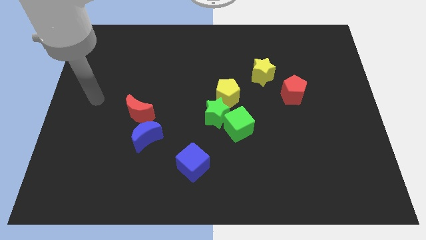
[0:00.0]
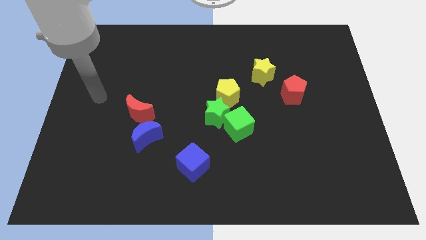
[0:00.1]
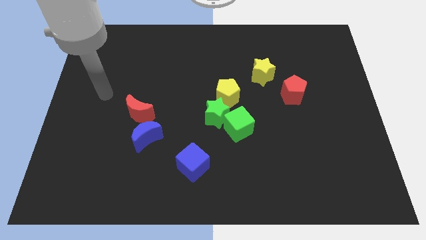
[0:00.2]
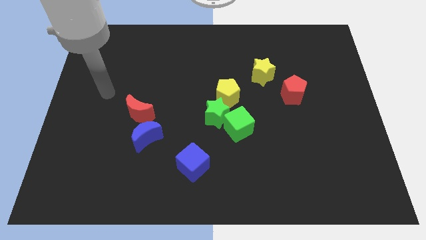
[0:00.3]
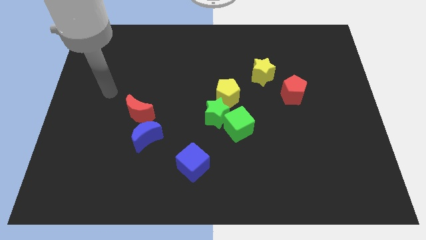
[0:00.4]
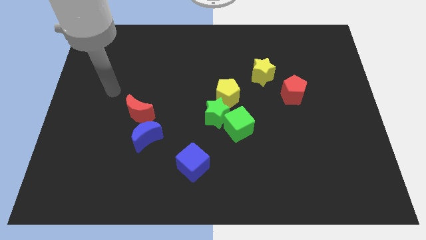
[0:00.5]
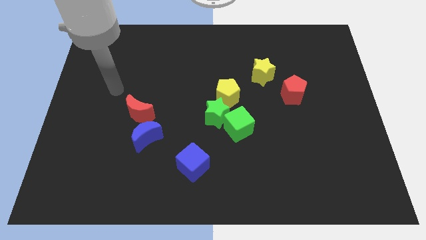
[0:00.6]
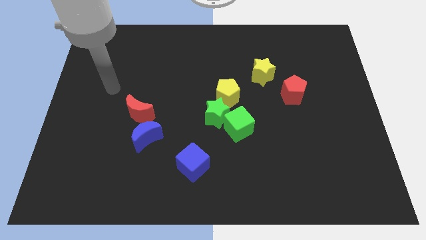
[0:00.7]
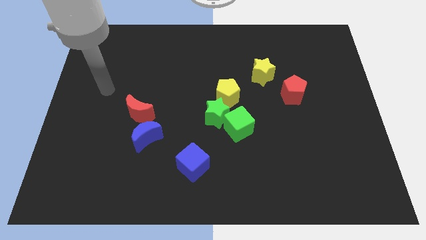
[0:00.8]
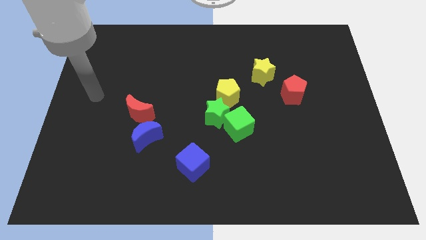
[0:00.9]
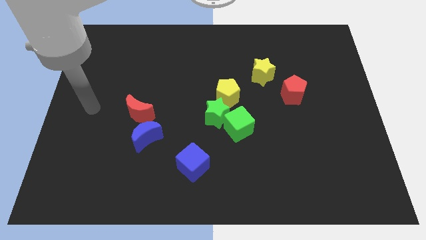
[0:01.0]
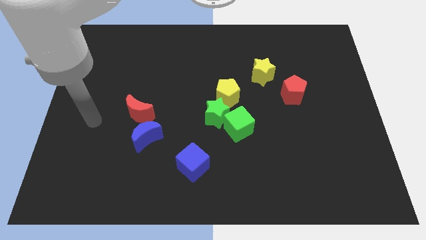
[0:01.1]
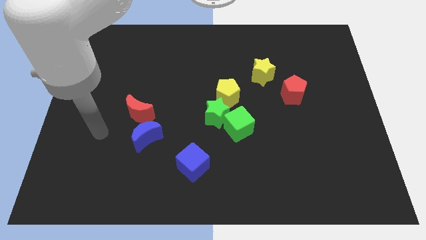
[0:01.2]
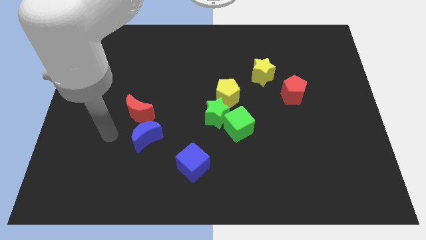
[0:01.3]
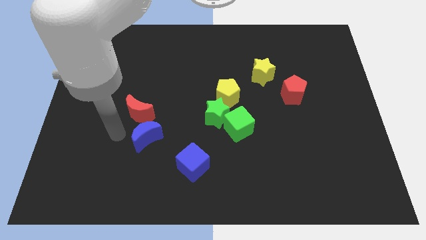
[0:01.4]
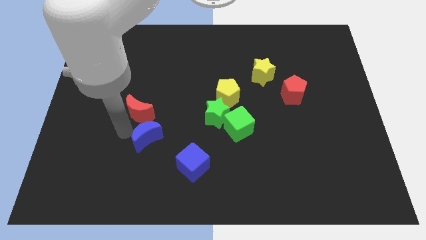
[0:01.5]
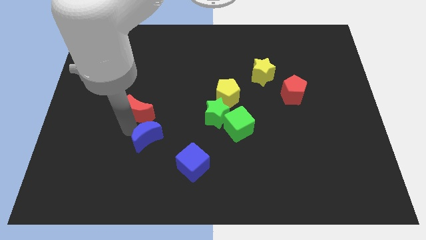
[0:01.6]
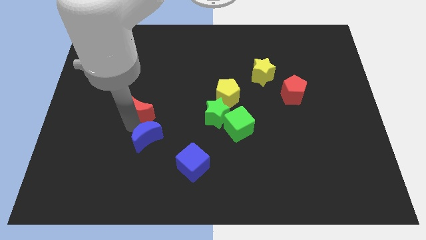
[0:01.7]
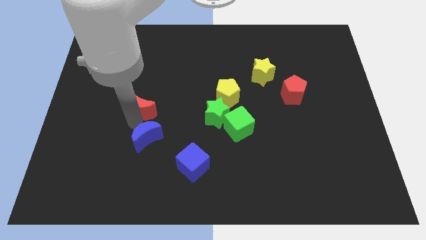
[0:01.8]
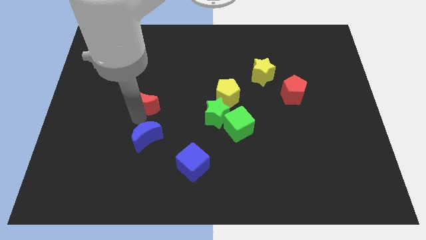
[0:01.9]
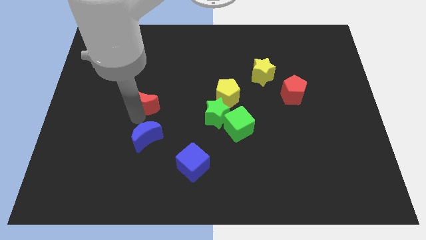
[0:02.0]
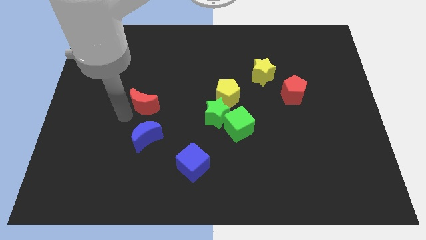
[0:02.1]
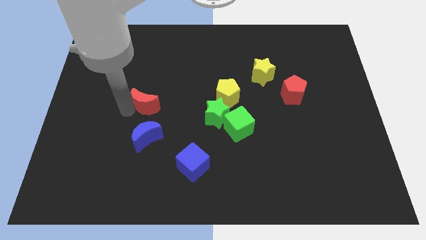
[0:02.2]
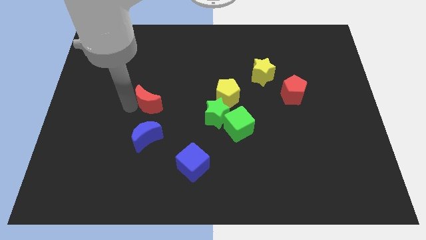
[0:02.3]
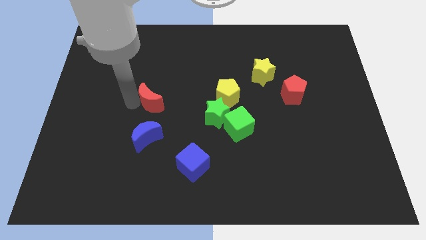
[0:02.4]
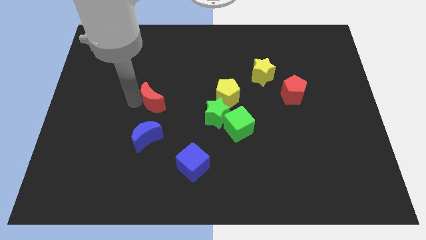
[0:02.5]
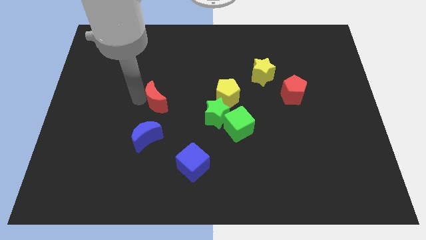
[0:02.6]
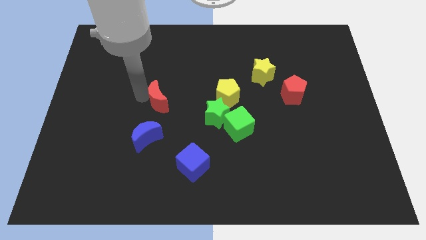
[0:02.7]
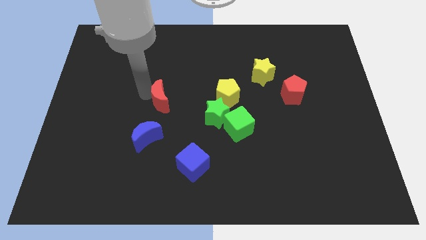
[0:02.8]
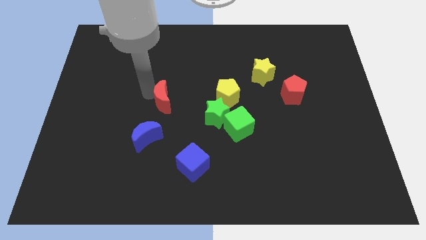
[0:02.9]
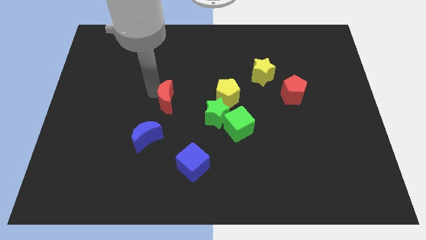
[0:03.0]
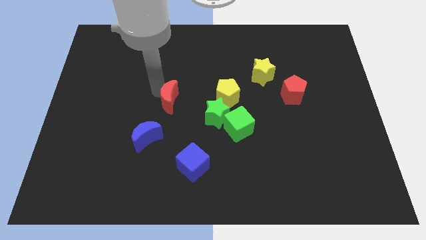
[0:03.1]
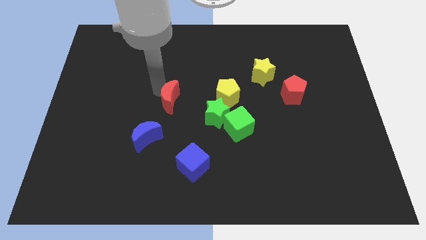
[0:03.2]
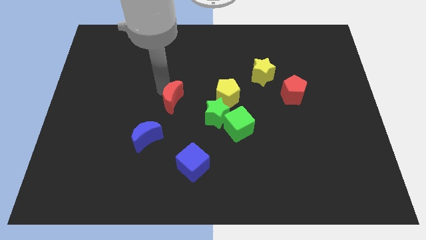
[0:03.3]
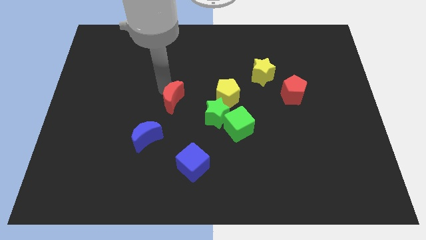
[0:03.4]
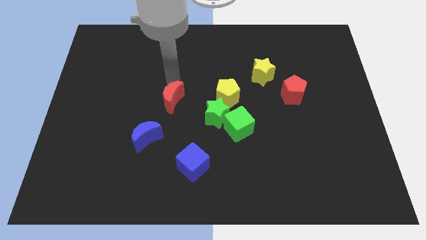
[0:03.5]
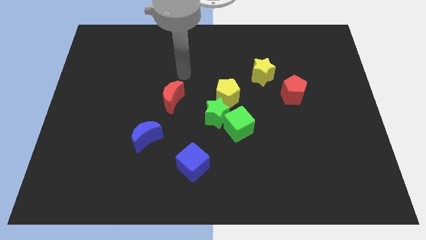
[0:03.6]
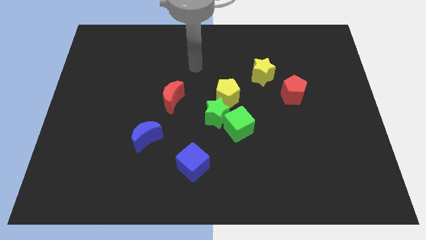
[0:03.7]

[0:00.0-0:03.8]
move the red crescent to the top right side of the blue crescent

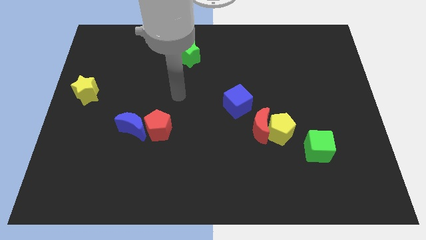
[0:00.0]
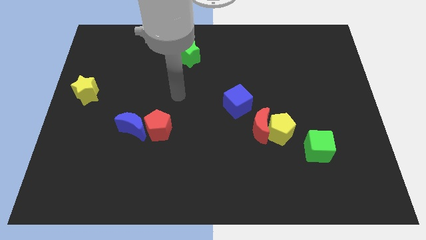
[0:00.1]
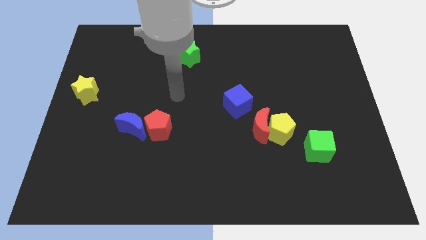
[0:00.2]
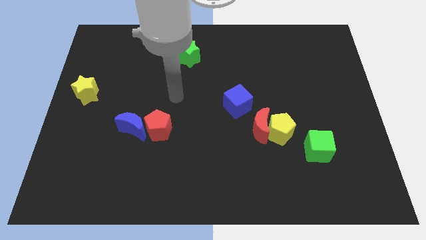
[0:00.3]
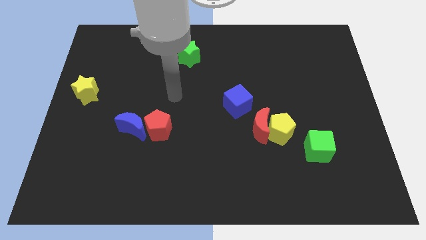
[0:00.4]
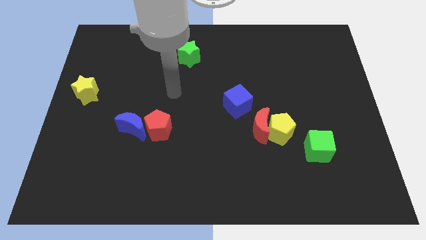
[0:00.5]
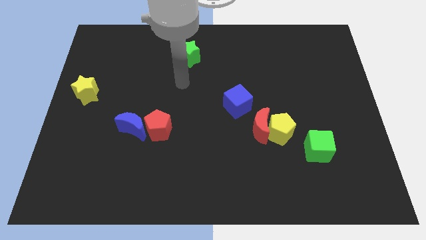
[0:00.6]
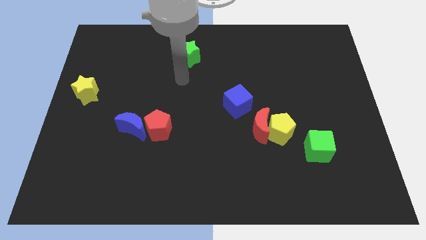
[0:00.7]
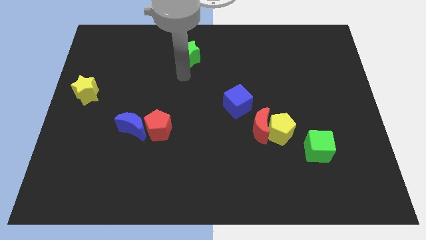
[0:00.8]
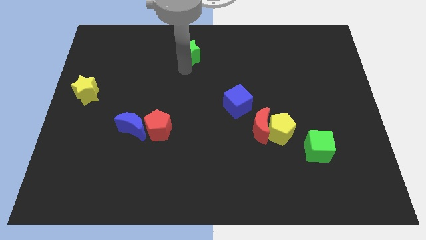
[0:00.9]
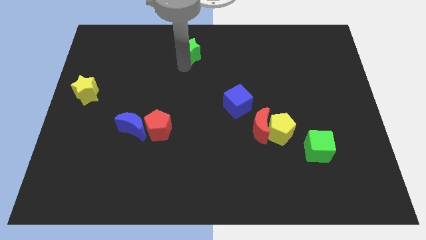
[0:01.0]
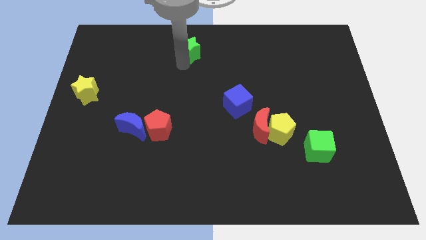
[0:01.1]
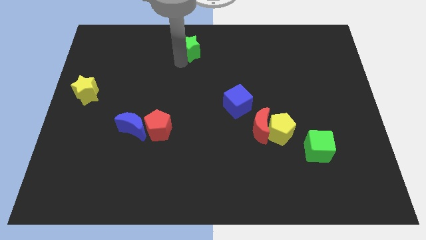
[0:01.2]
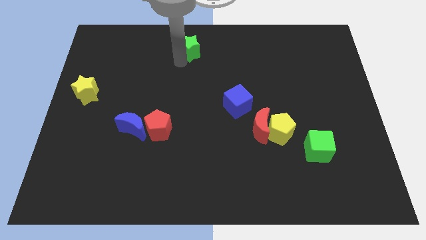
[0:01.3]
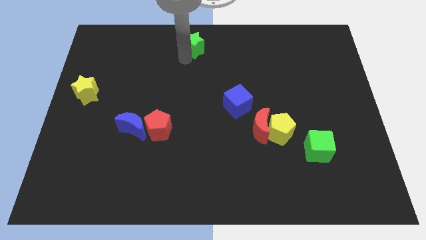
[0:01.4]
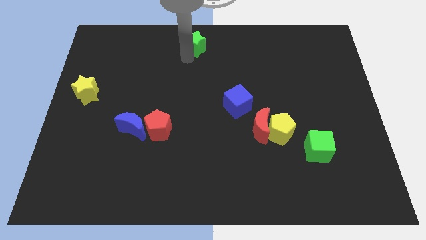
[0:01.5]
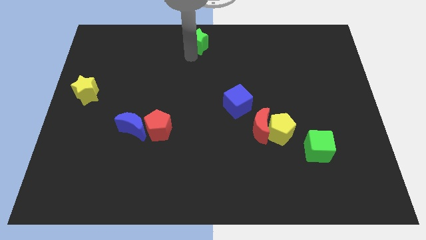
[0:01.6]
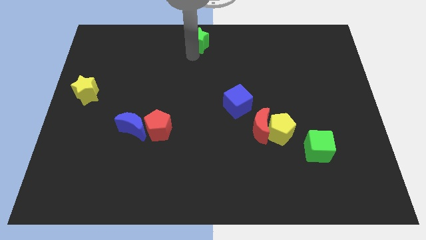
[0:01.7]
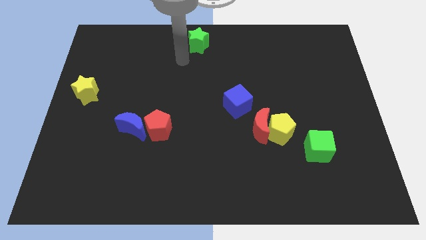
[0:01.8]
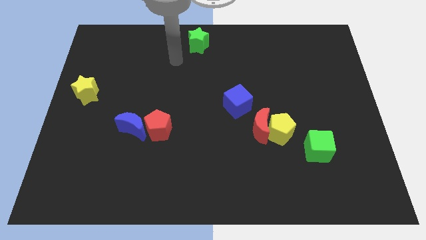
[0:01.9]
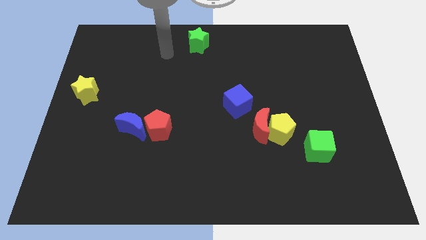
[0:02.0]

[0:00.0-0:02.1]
move the green star to the top center of the board

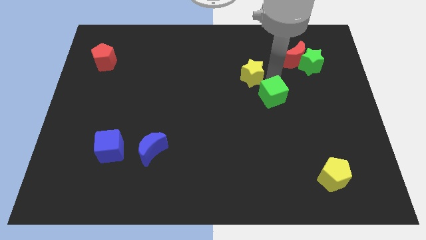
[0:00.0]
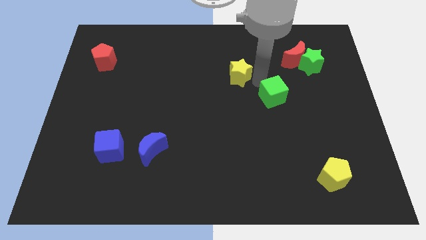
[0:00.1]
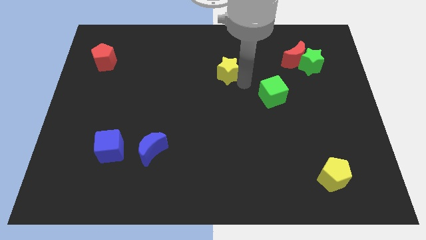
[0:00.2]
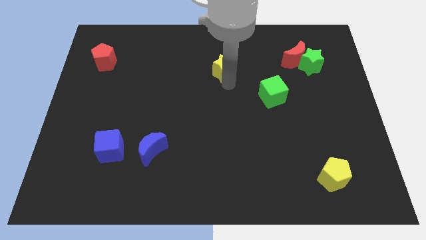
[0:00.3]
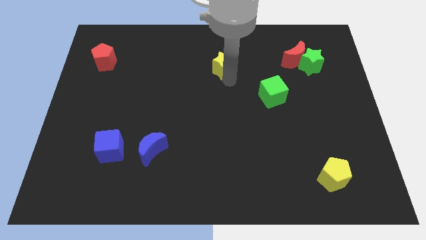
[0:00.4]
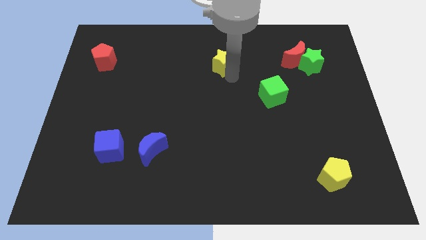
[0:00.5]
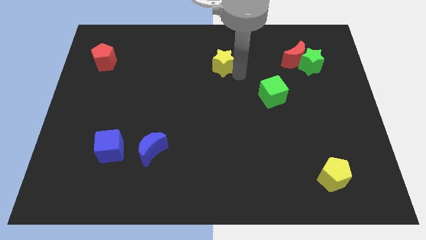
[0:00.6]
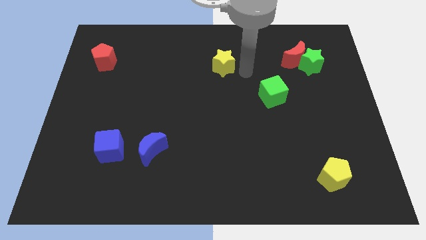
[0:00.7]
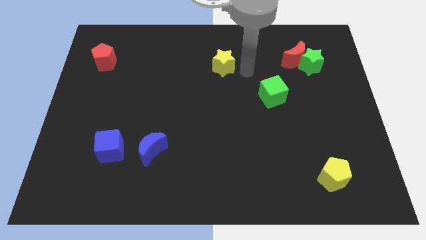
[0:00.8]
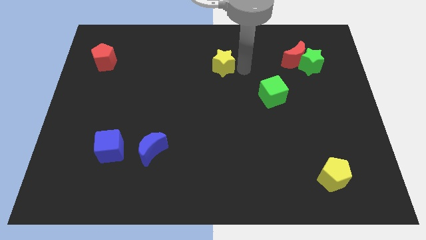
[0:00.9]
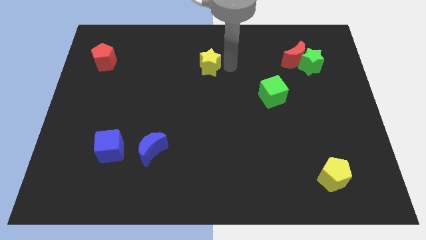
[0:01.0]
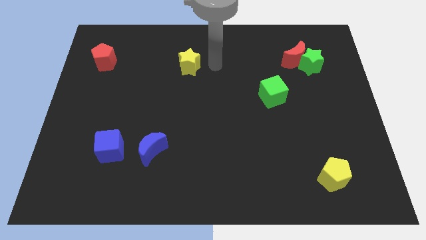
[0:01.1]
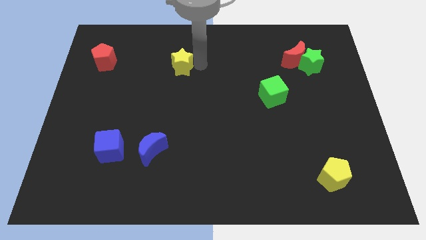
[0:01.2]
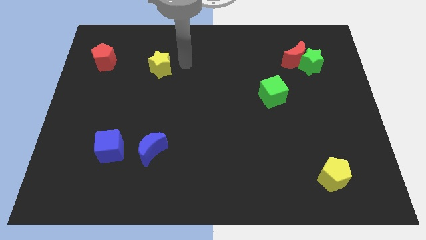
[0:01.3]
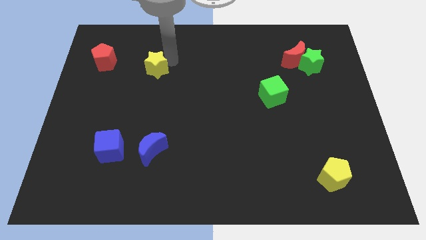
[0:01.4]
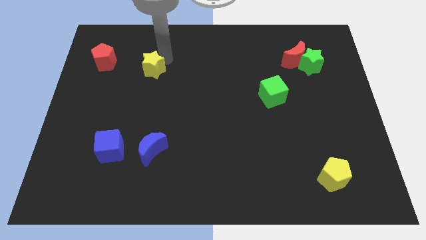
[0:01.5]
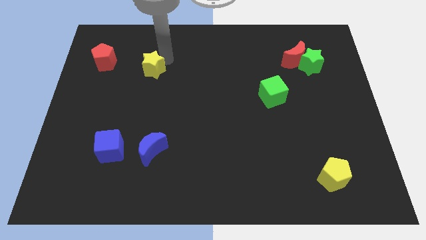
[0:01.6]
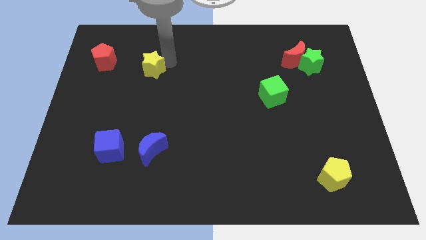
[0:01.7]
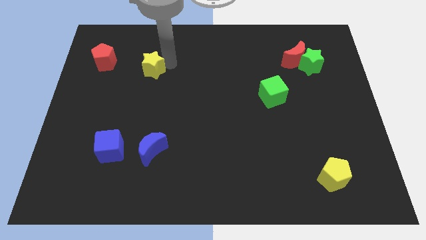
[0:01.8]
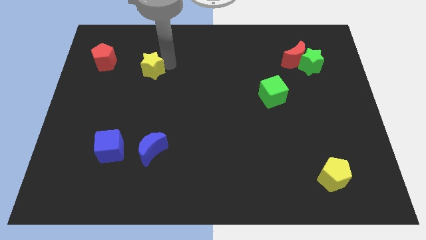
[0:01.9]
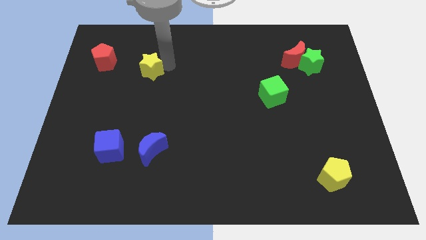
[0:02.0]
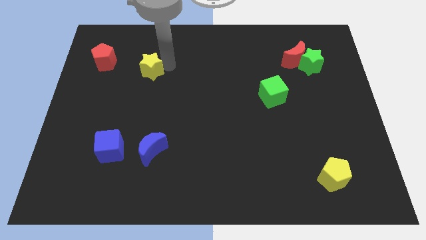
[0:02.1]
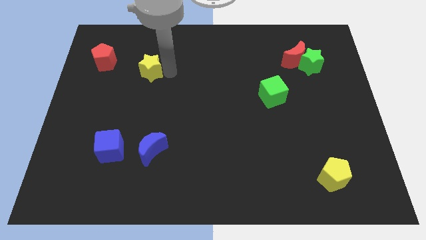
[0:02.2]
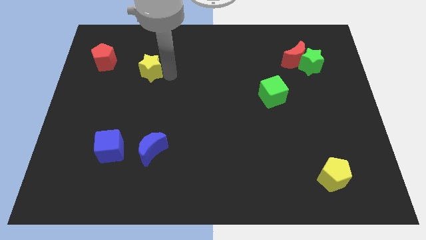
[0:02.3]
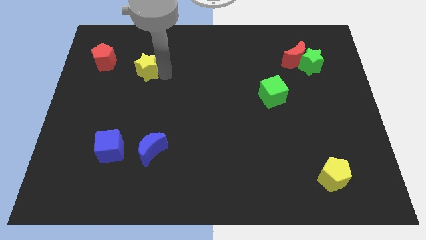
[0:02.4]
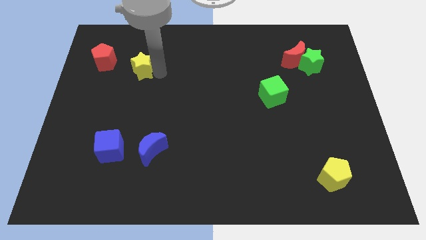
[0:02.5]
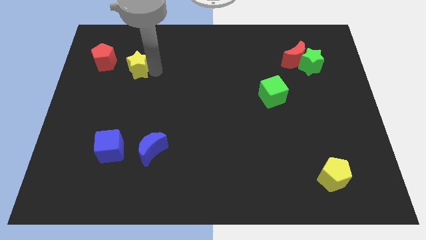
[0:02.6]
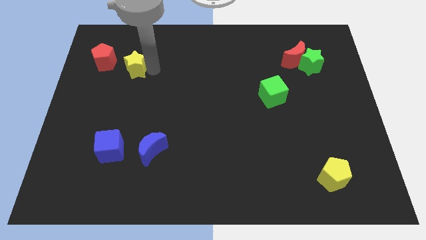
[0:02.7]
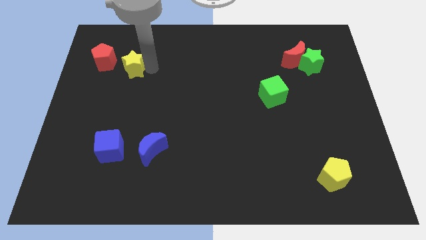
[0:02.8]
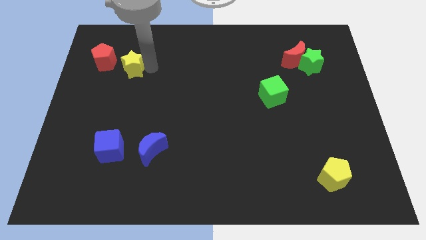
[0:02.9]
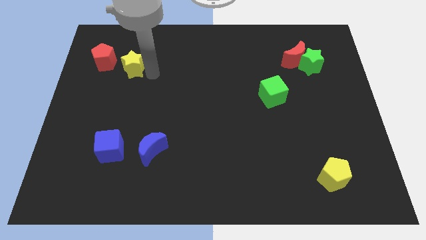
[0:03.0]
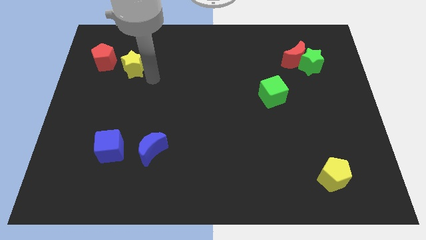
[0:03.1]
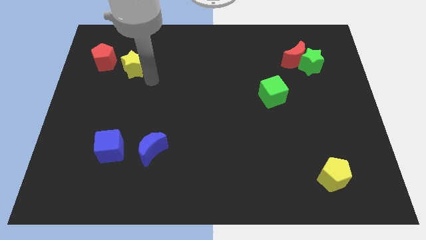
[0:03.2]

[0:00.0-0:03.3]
move the yellow star towards the red pentagon
